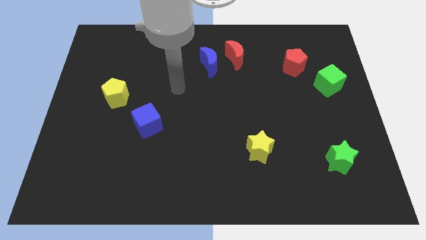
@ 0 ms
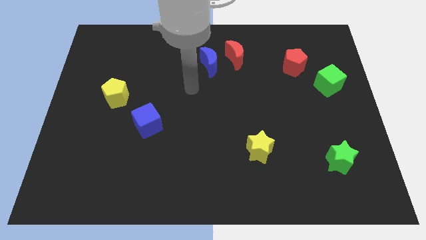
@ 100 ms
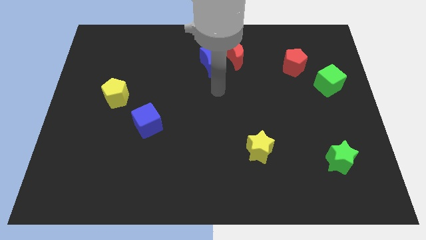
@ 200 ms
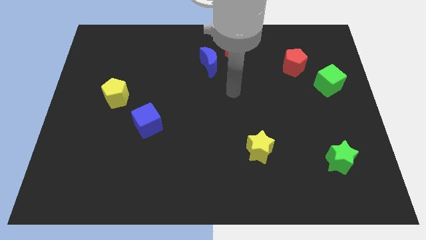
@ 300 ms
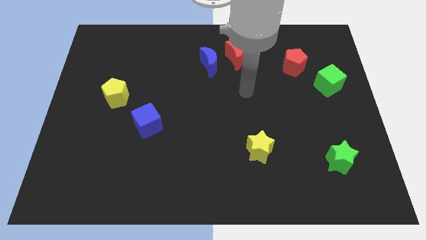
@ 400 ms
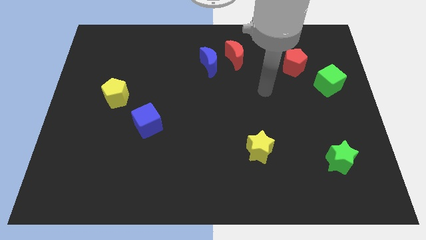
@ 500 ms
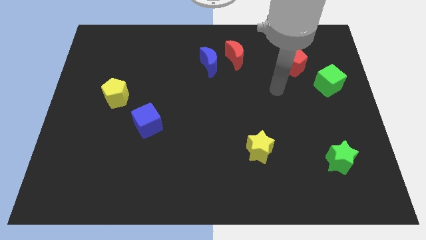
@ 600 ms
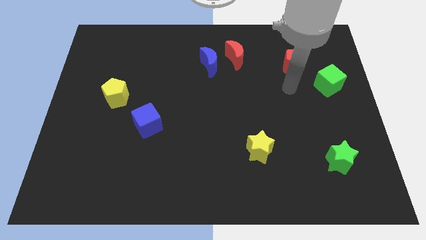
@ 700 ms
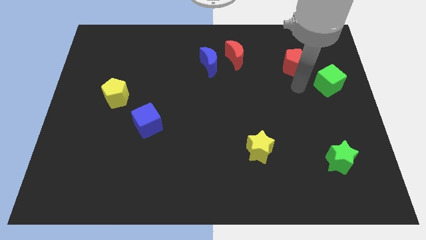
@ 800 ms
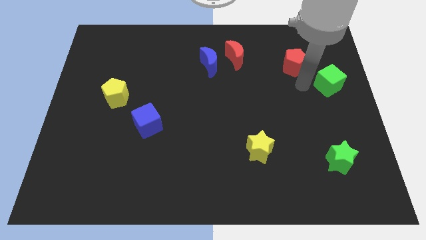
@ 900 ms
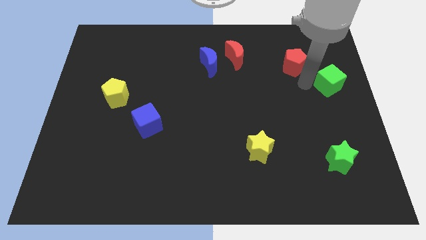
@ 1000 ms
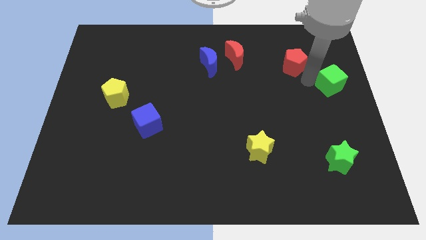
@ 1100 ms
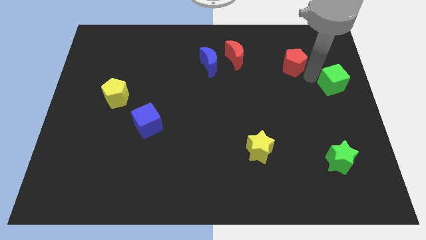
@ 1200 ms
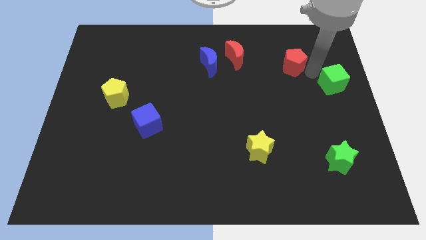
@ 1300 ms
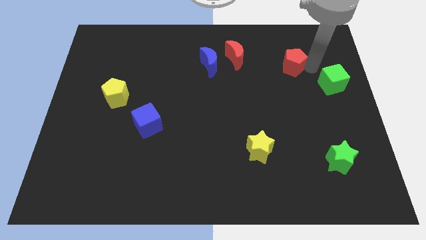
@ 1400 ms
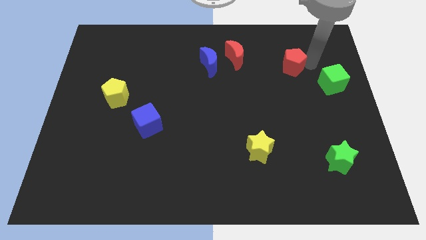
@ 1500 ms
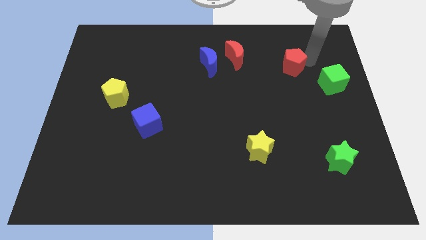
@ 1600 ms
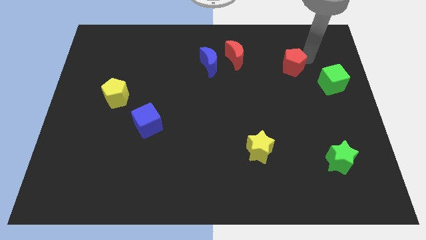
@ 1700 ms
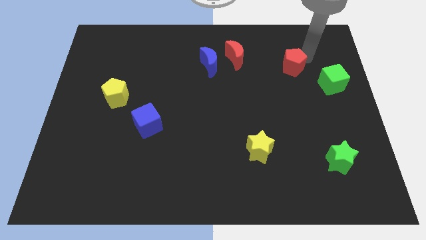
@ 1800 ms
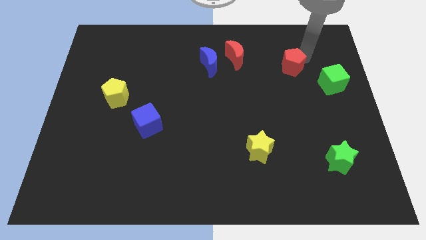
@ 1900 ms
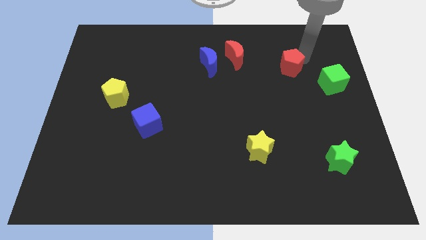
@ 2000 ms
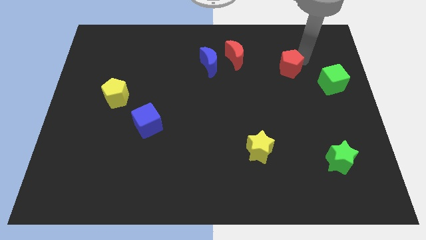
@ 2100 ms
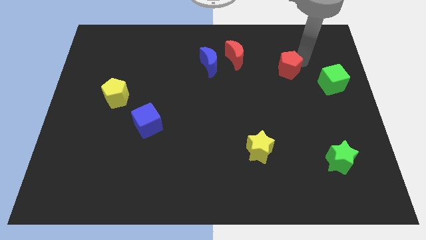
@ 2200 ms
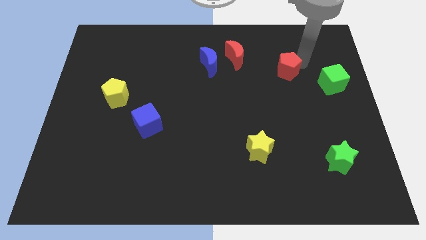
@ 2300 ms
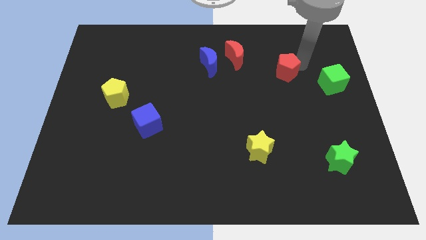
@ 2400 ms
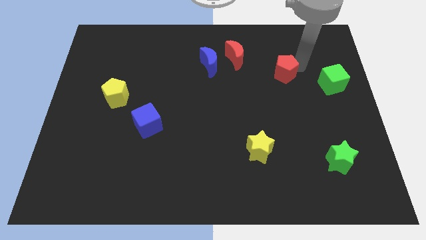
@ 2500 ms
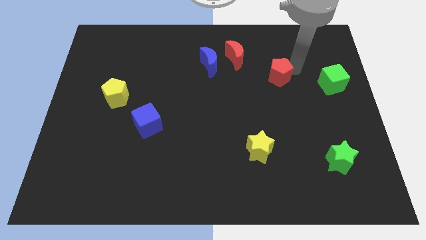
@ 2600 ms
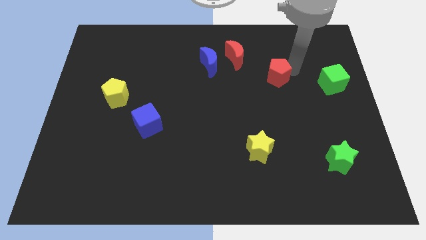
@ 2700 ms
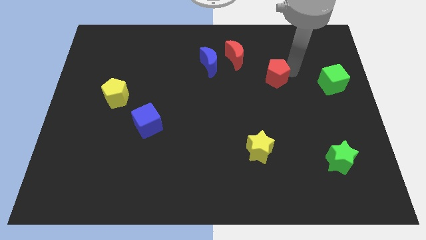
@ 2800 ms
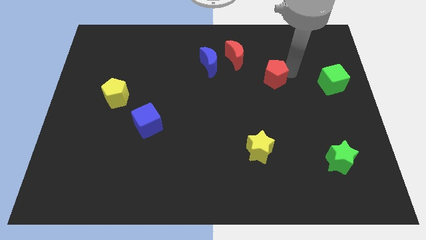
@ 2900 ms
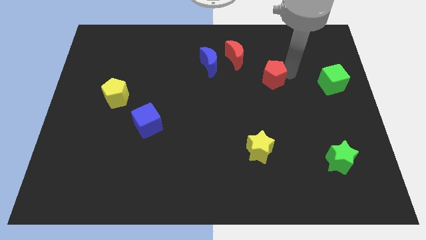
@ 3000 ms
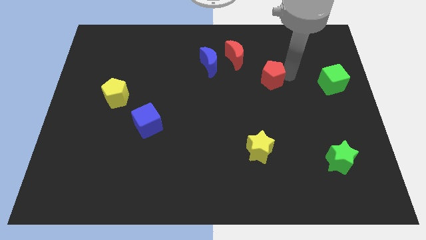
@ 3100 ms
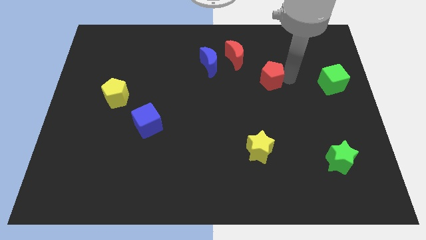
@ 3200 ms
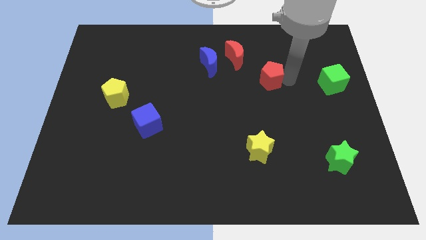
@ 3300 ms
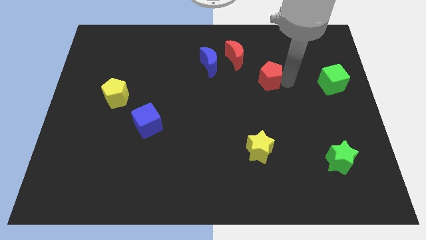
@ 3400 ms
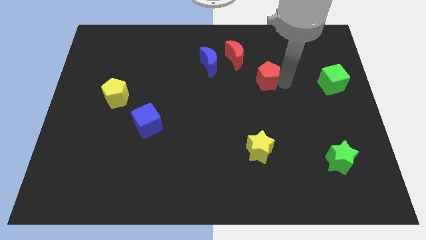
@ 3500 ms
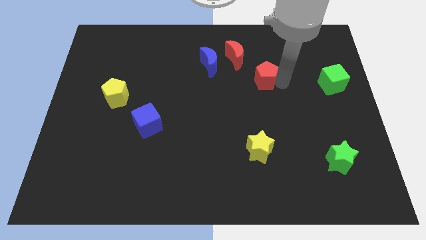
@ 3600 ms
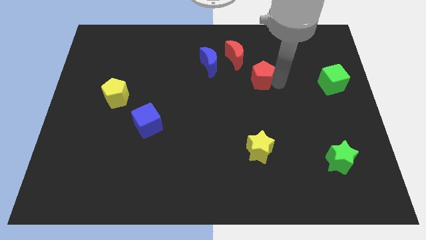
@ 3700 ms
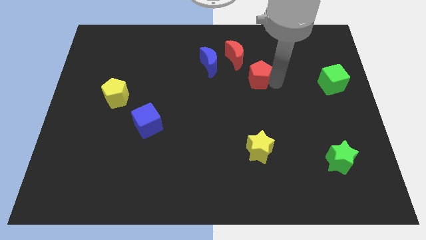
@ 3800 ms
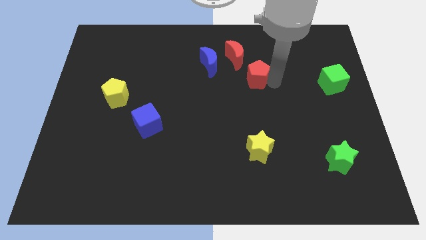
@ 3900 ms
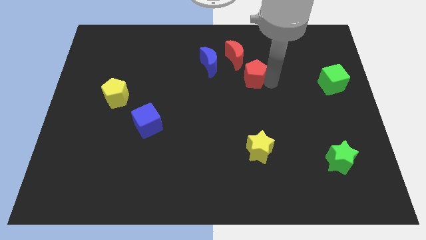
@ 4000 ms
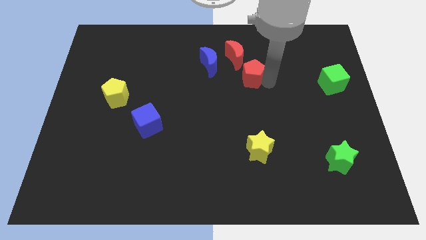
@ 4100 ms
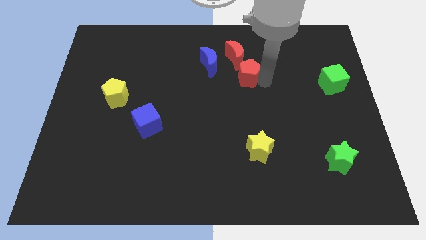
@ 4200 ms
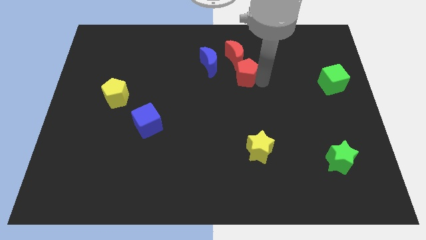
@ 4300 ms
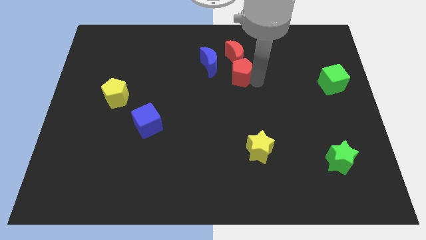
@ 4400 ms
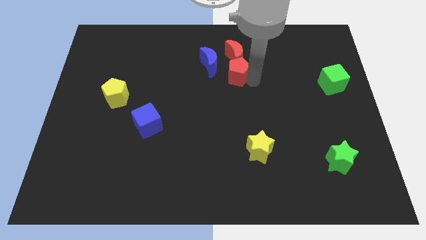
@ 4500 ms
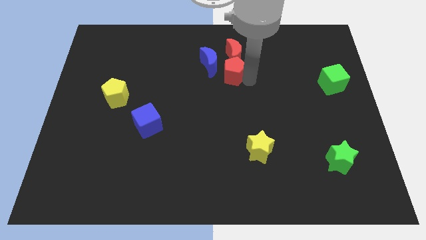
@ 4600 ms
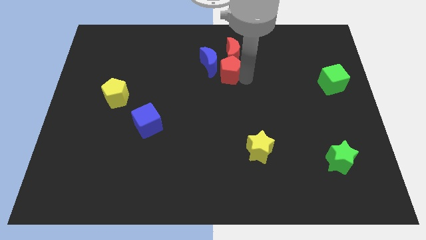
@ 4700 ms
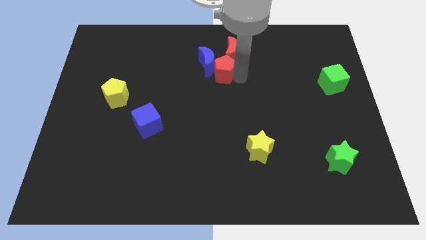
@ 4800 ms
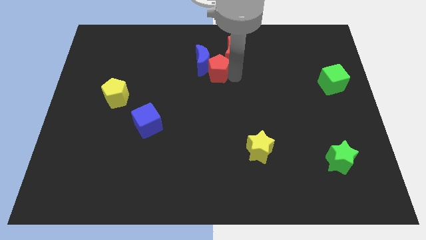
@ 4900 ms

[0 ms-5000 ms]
push the red pentagon close to the blue moon

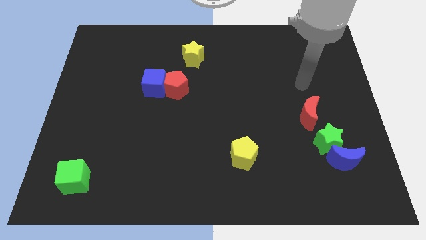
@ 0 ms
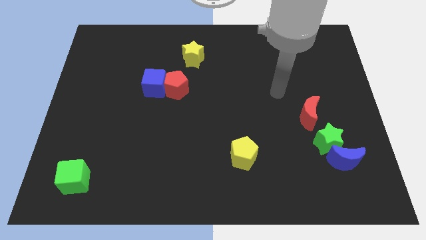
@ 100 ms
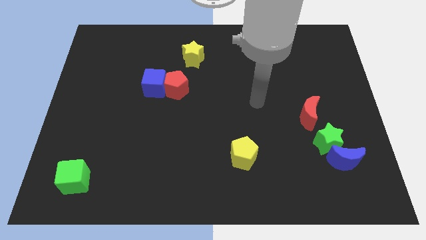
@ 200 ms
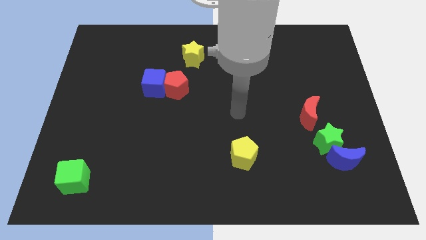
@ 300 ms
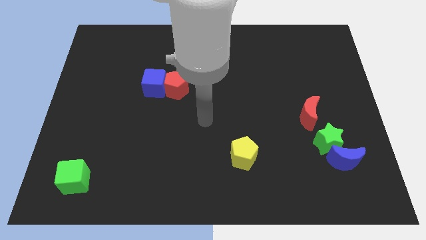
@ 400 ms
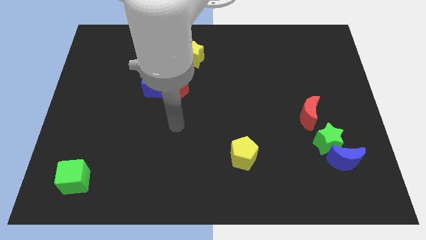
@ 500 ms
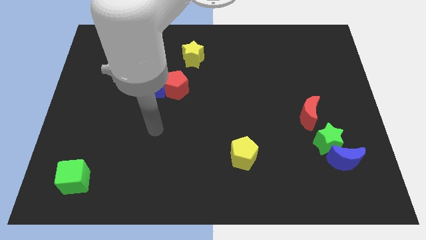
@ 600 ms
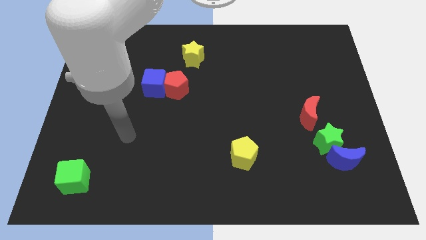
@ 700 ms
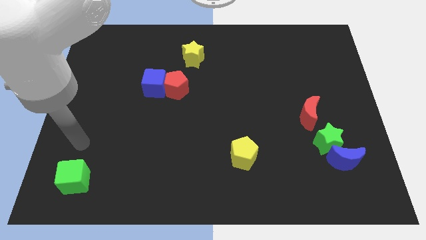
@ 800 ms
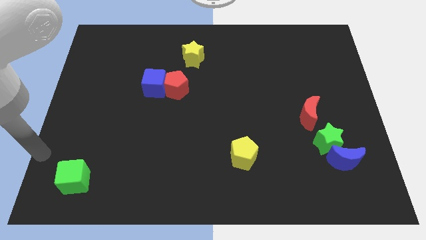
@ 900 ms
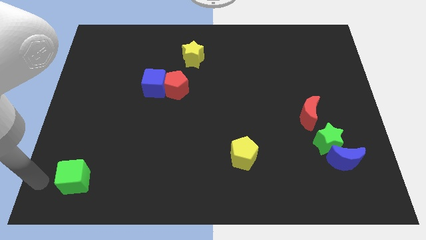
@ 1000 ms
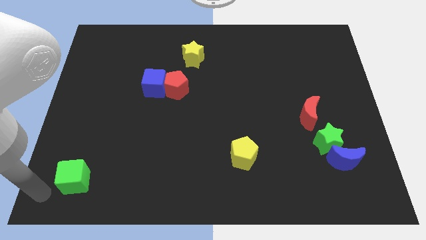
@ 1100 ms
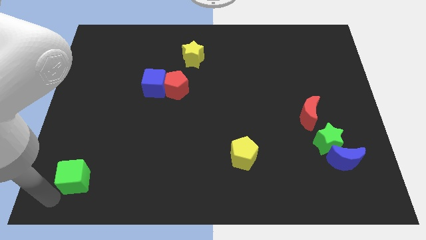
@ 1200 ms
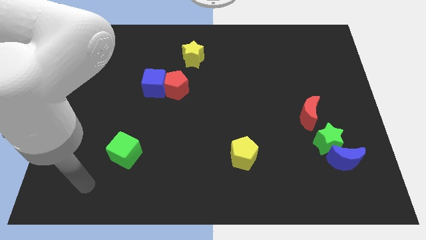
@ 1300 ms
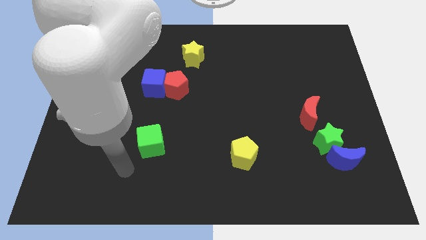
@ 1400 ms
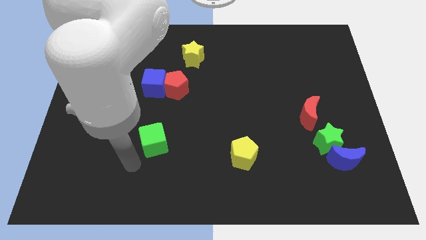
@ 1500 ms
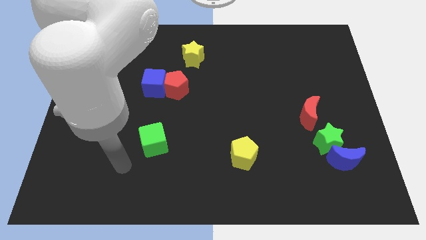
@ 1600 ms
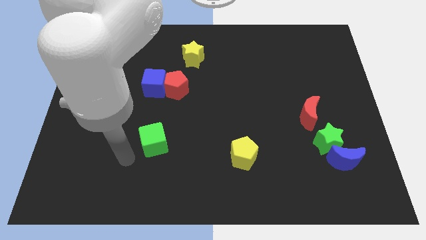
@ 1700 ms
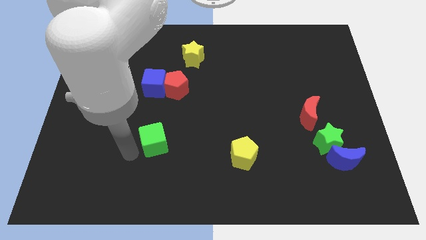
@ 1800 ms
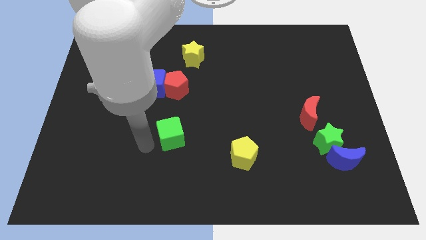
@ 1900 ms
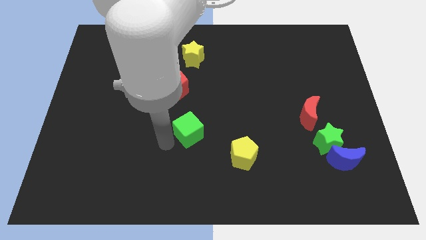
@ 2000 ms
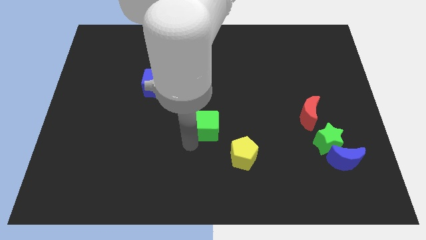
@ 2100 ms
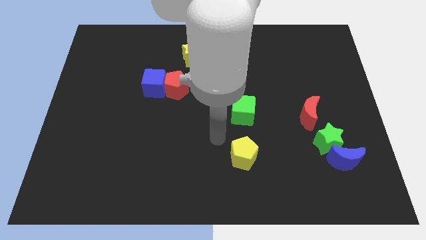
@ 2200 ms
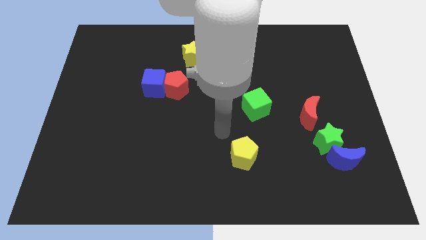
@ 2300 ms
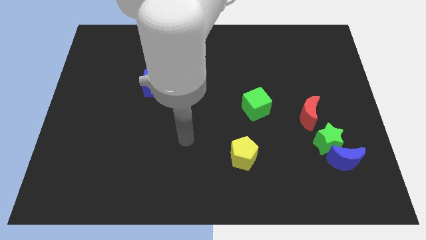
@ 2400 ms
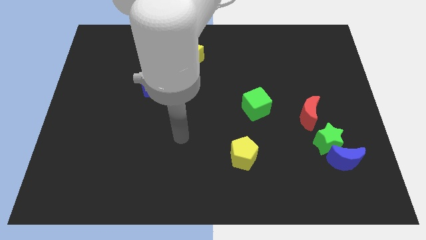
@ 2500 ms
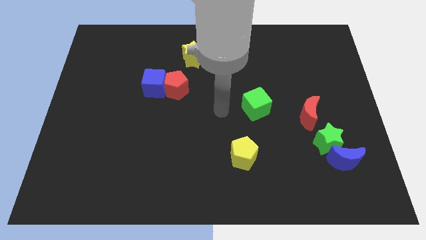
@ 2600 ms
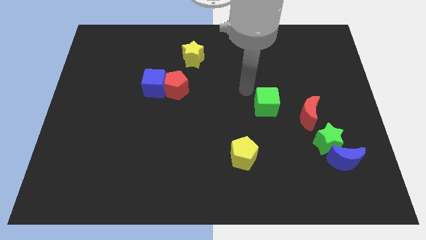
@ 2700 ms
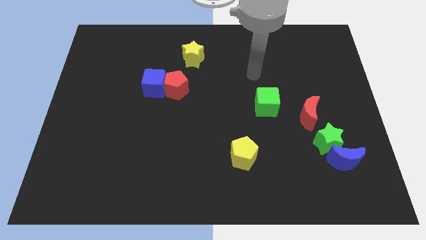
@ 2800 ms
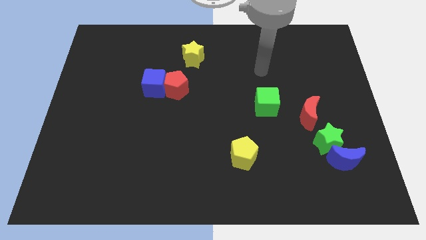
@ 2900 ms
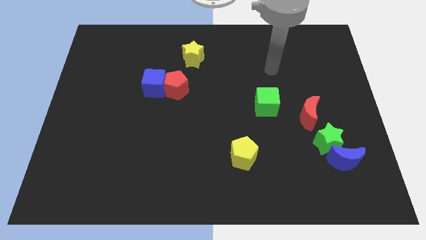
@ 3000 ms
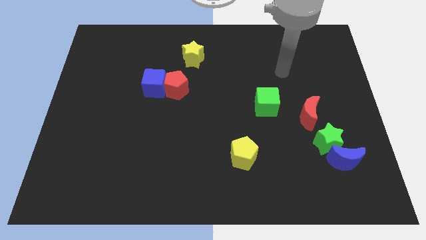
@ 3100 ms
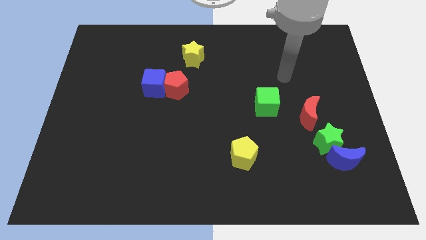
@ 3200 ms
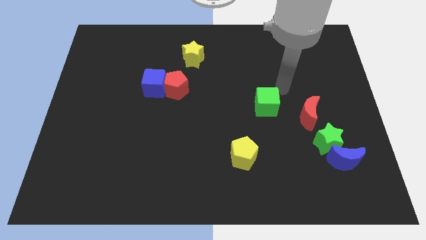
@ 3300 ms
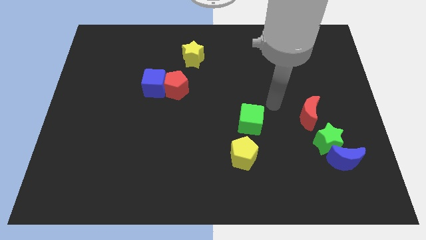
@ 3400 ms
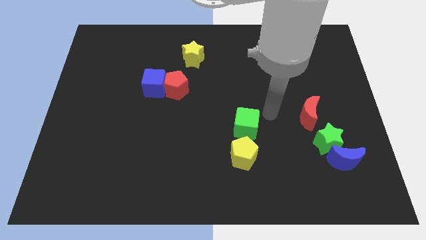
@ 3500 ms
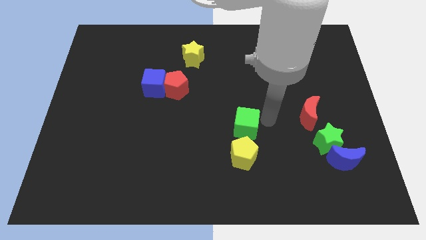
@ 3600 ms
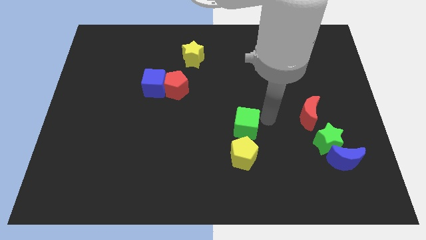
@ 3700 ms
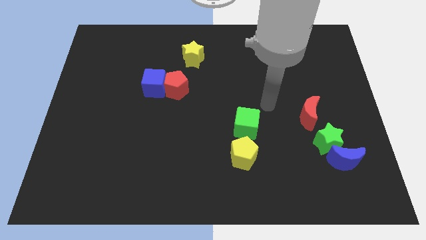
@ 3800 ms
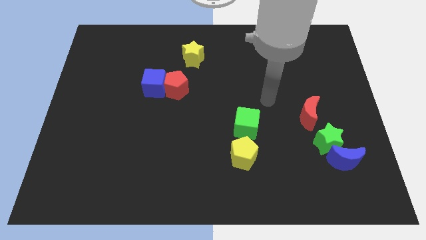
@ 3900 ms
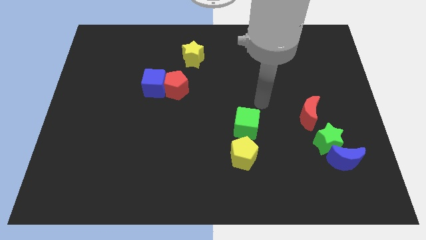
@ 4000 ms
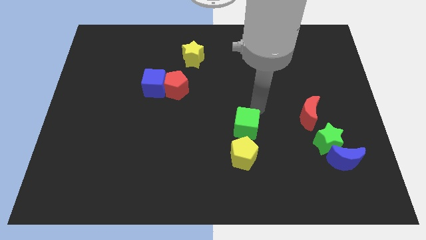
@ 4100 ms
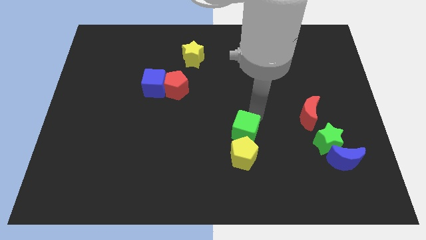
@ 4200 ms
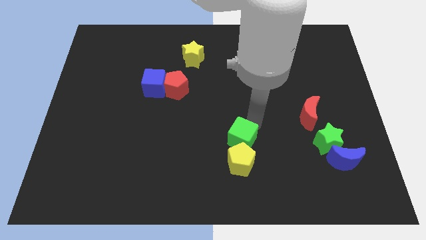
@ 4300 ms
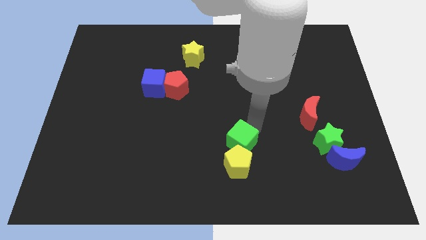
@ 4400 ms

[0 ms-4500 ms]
move the green cube towards the yellow pentagon
